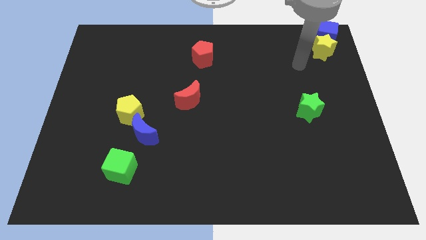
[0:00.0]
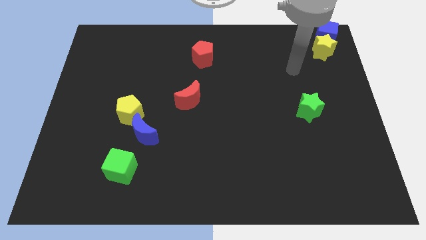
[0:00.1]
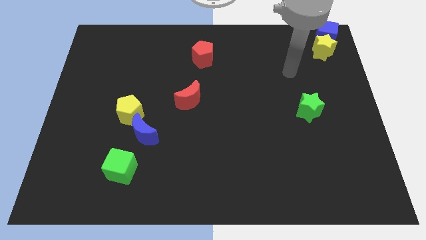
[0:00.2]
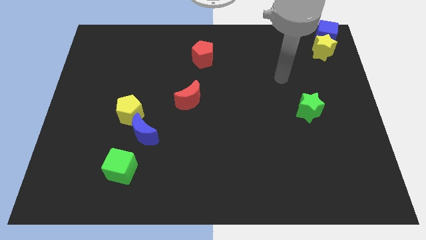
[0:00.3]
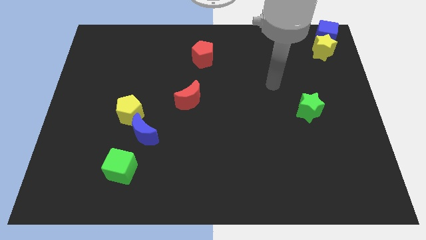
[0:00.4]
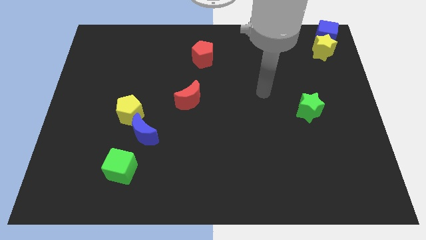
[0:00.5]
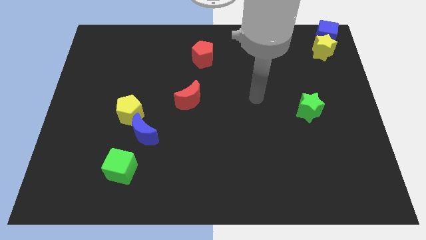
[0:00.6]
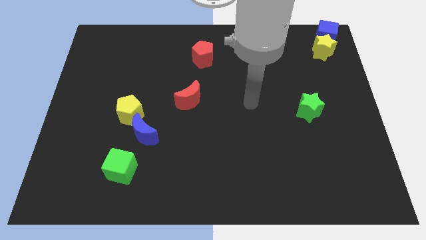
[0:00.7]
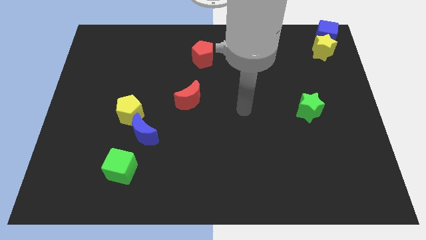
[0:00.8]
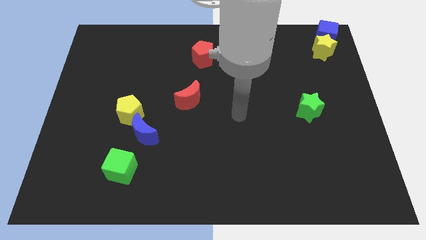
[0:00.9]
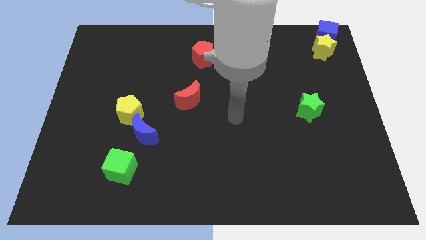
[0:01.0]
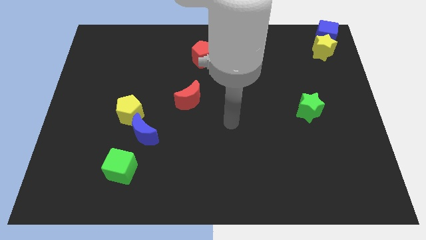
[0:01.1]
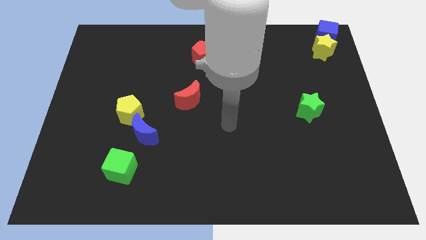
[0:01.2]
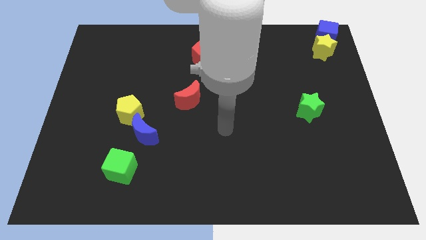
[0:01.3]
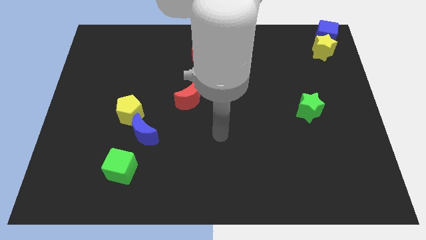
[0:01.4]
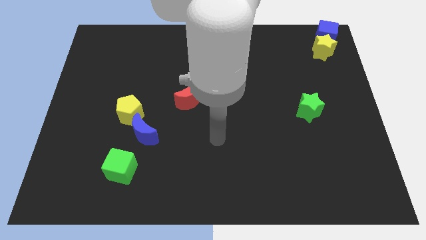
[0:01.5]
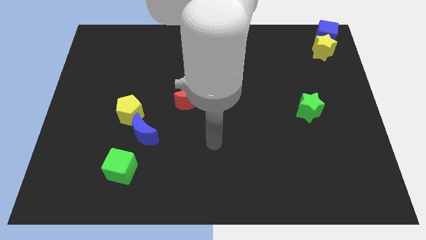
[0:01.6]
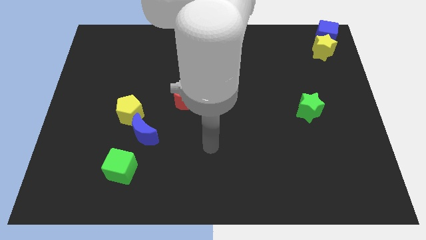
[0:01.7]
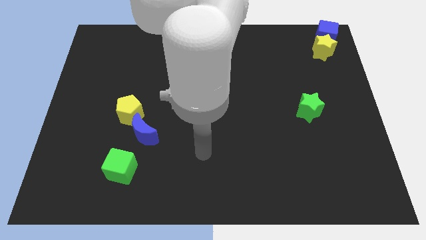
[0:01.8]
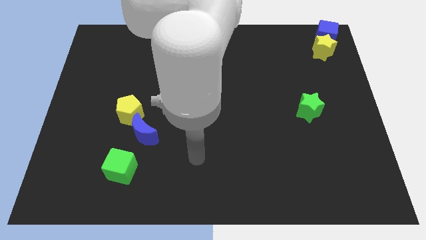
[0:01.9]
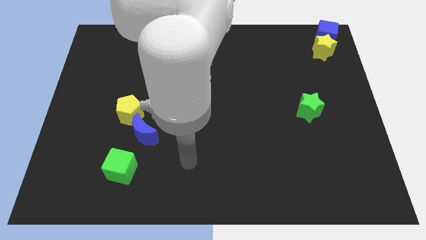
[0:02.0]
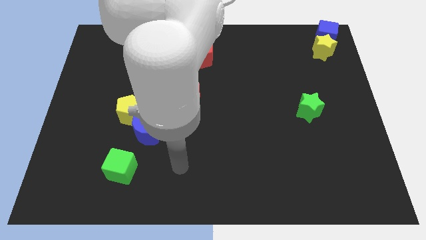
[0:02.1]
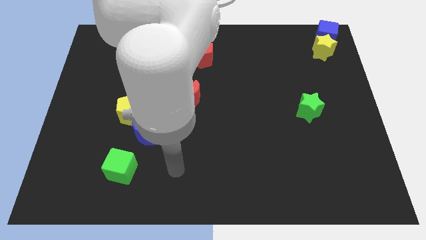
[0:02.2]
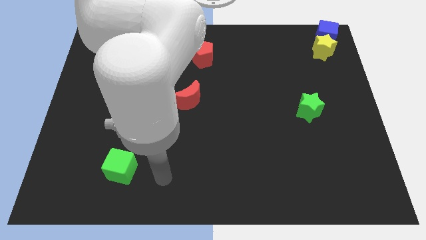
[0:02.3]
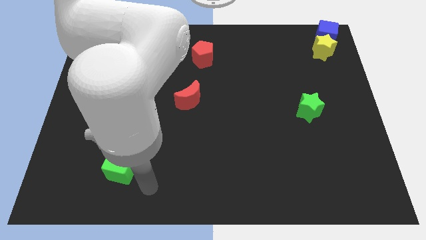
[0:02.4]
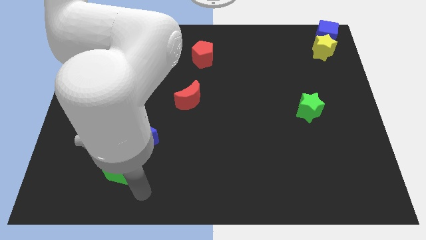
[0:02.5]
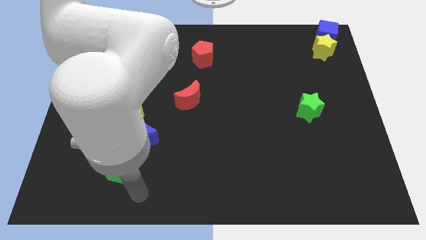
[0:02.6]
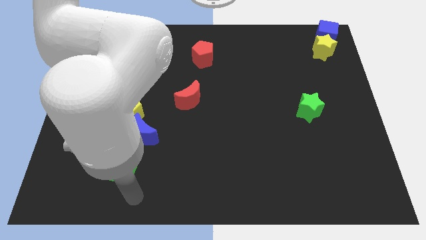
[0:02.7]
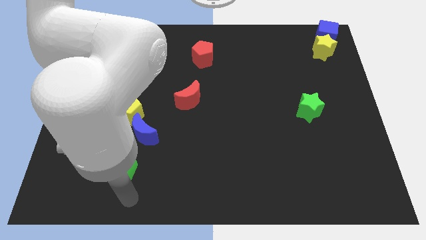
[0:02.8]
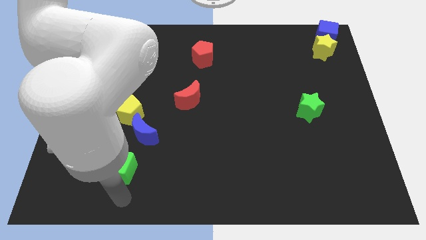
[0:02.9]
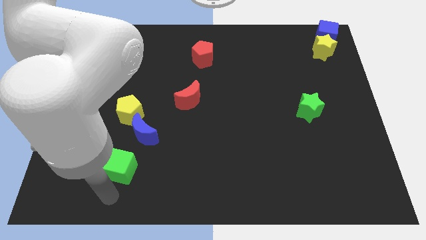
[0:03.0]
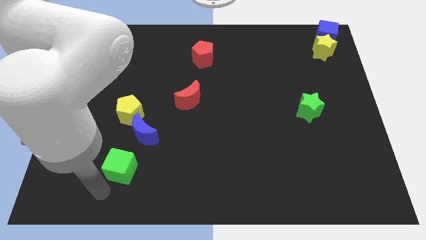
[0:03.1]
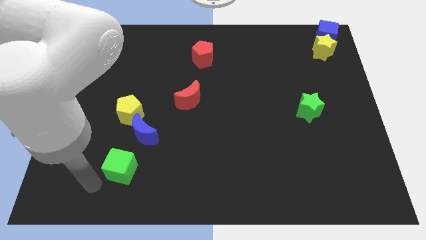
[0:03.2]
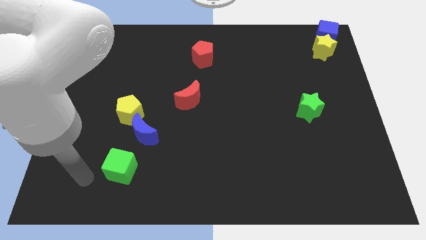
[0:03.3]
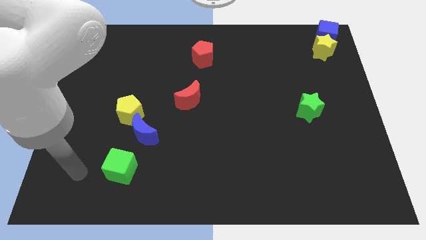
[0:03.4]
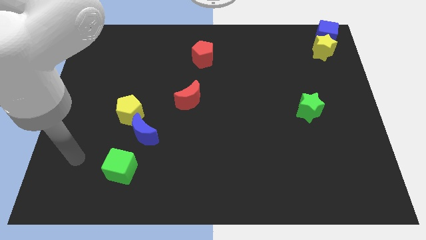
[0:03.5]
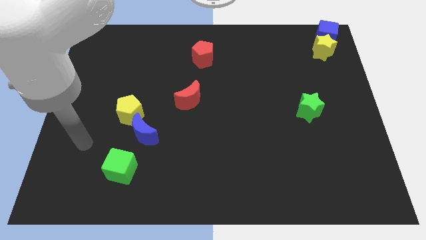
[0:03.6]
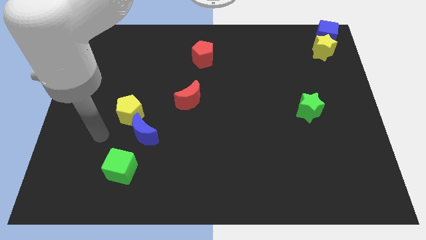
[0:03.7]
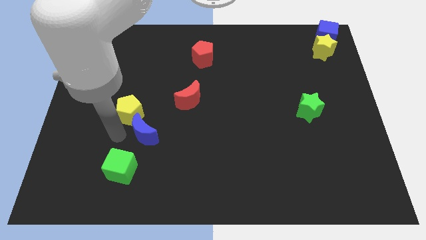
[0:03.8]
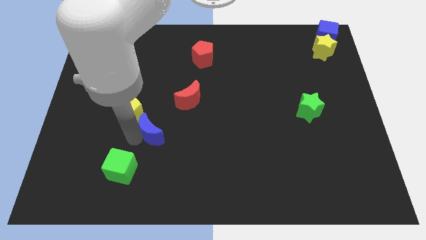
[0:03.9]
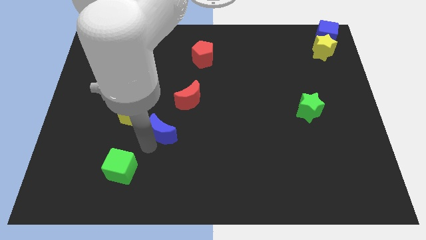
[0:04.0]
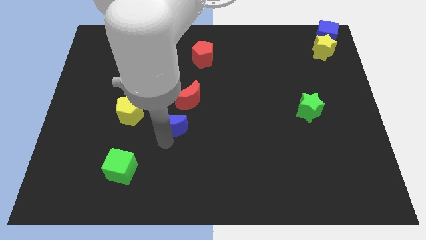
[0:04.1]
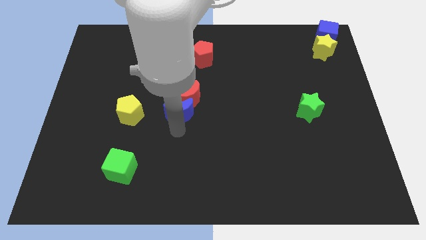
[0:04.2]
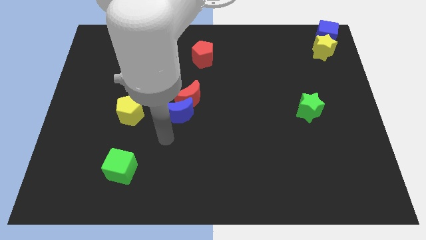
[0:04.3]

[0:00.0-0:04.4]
move the blue crescent to the bottom of the red crescent

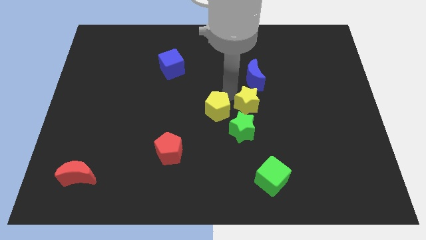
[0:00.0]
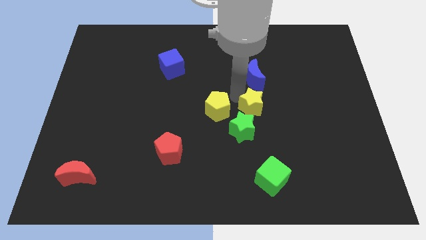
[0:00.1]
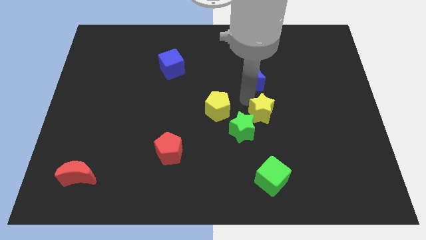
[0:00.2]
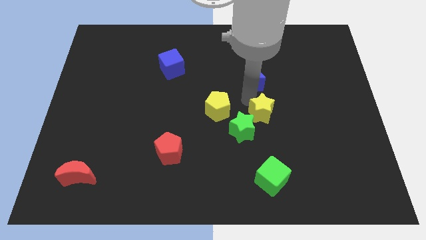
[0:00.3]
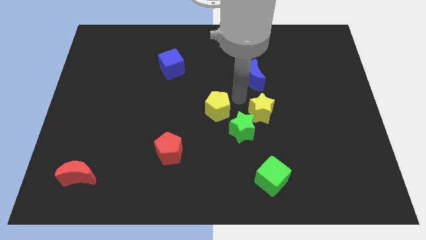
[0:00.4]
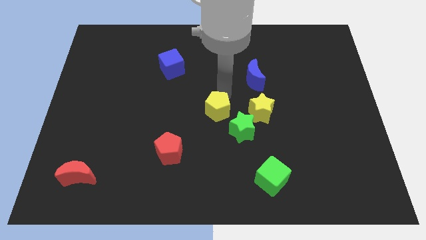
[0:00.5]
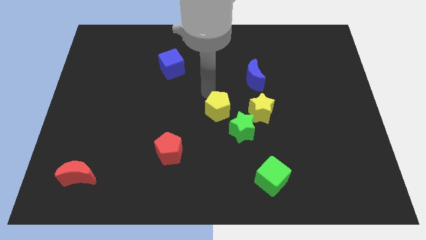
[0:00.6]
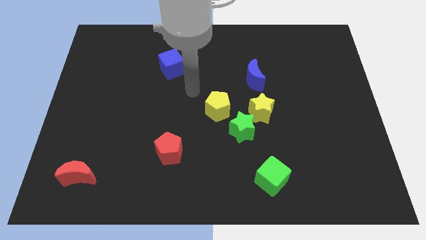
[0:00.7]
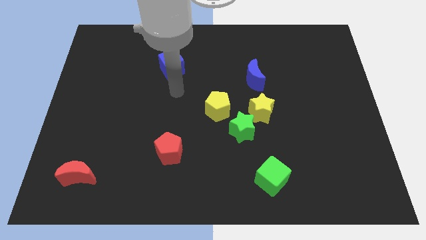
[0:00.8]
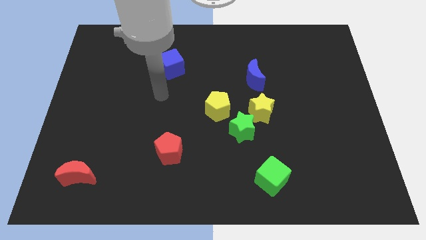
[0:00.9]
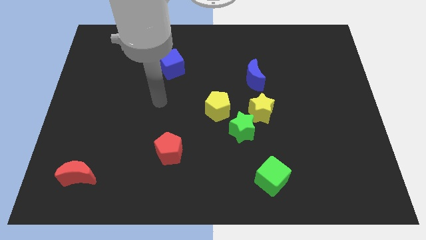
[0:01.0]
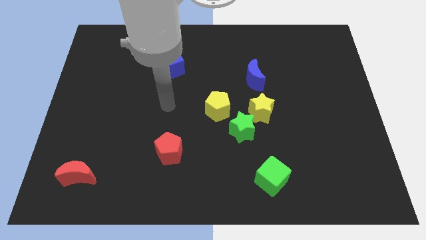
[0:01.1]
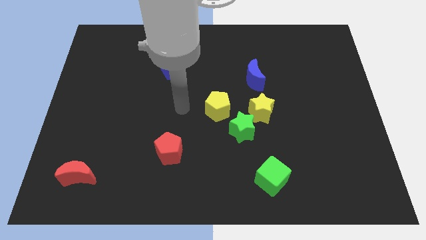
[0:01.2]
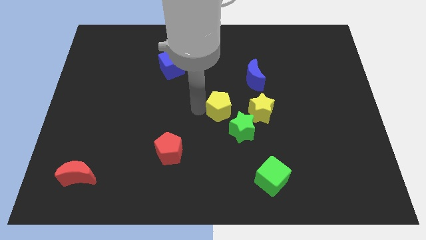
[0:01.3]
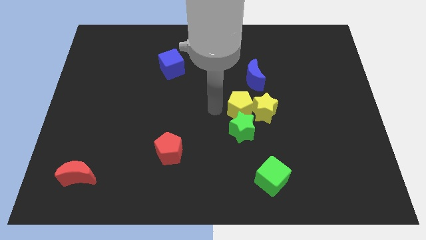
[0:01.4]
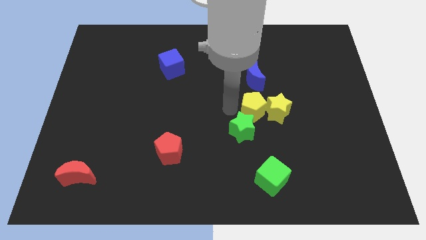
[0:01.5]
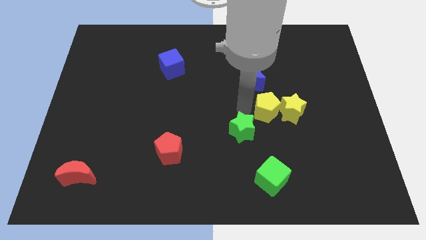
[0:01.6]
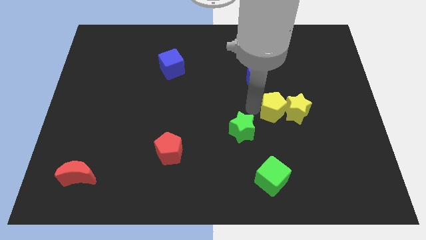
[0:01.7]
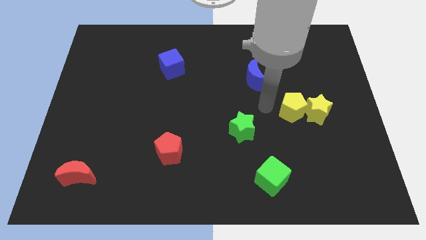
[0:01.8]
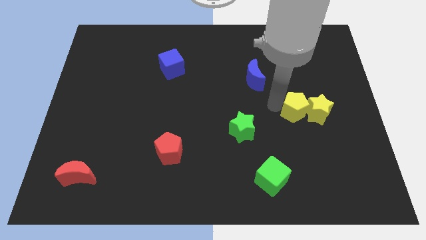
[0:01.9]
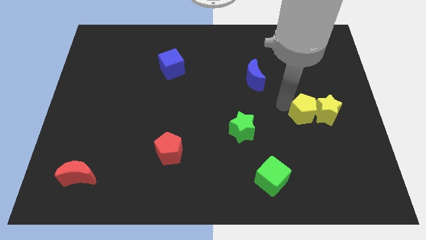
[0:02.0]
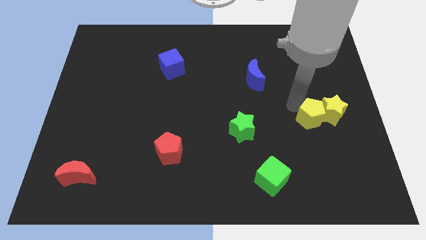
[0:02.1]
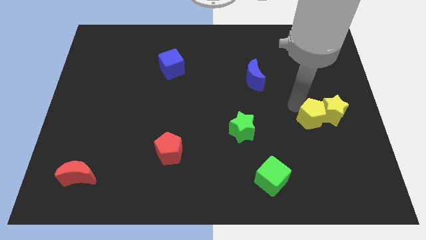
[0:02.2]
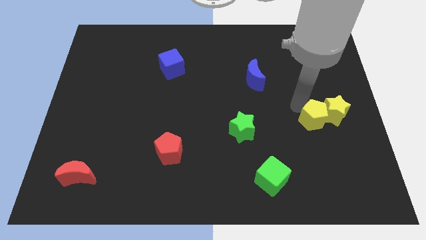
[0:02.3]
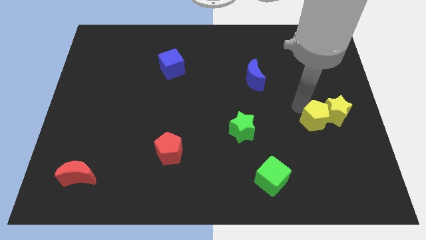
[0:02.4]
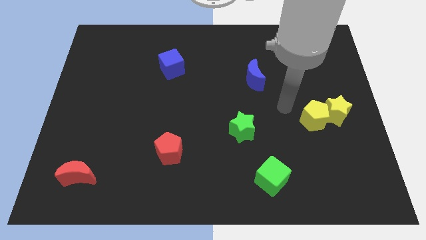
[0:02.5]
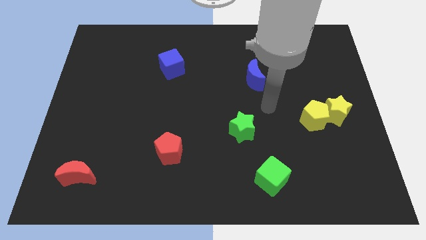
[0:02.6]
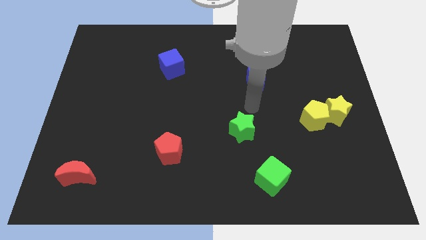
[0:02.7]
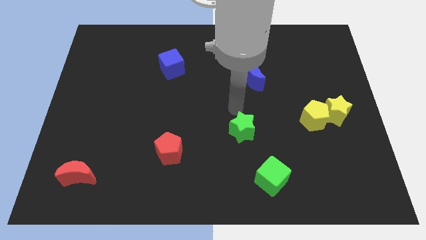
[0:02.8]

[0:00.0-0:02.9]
move yellow blocks to the right center of the board

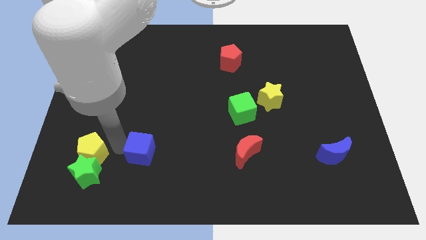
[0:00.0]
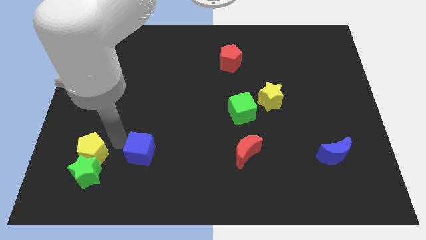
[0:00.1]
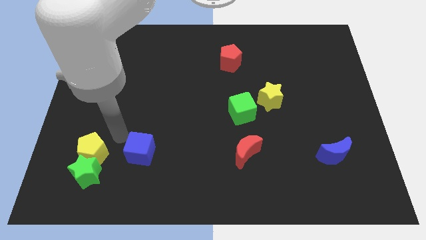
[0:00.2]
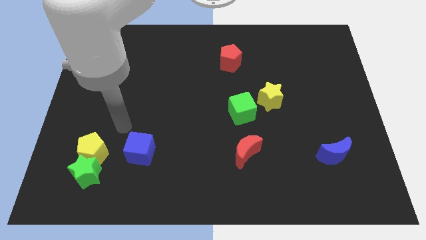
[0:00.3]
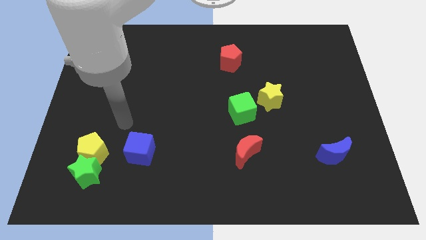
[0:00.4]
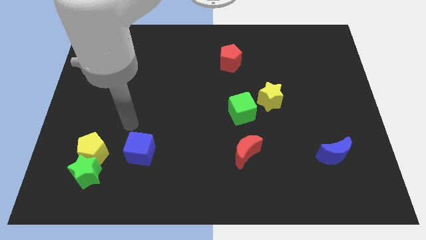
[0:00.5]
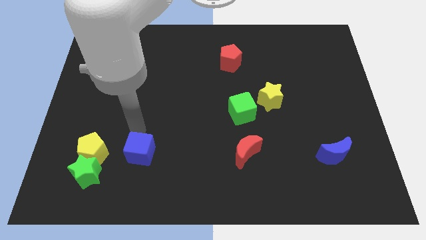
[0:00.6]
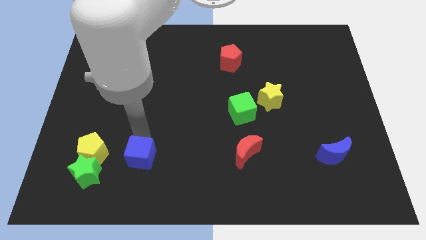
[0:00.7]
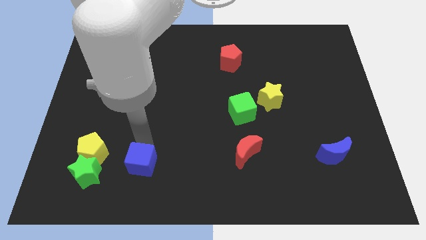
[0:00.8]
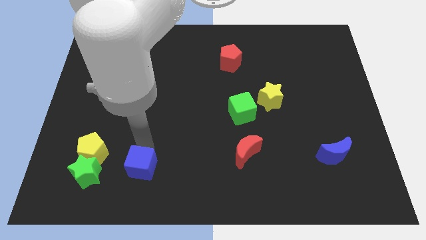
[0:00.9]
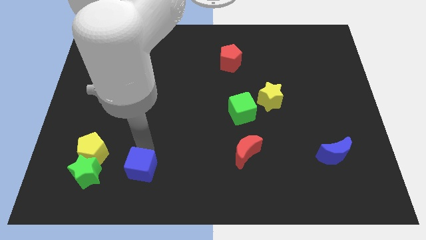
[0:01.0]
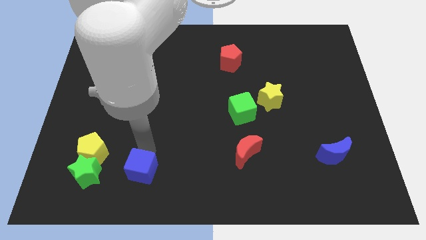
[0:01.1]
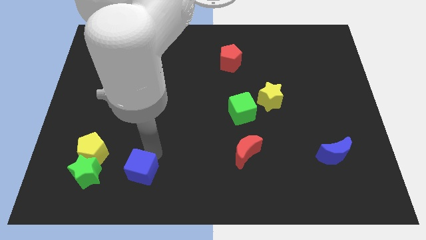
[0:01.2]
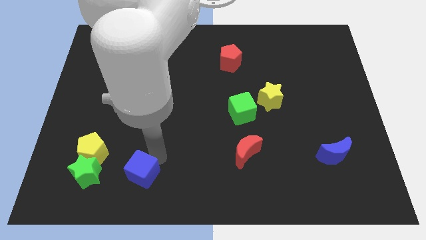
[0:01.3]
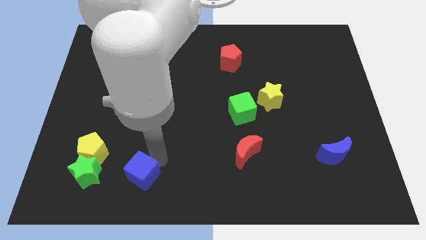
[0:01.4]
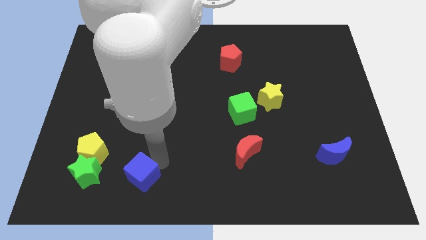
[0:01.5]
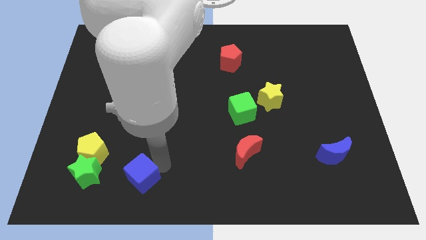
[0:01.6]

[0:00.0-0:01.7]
move the blue cube to the right of the green star

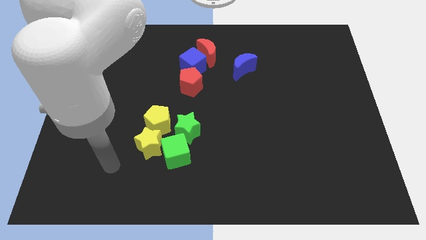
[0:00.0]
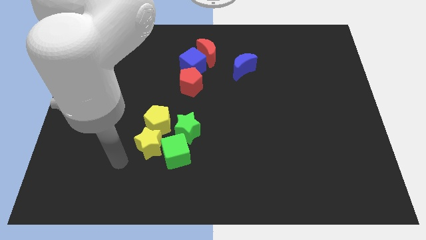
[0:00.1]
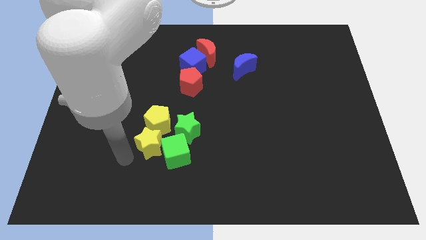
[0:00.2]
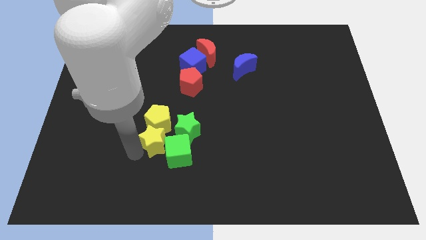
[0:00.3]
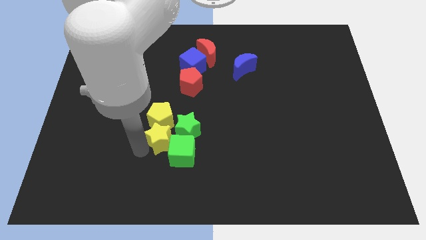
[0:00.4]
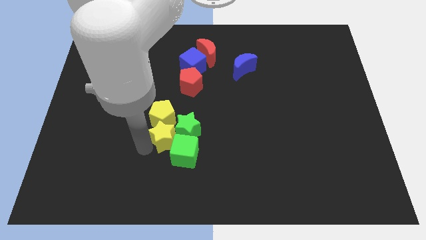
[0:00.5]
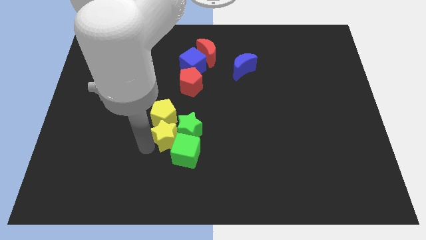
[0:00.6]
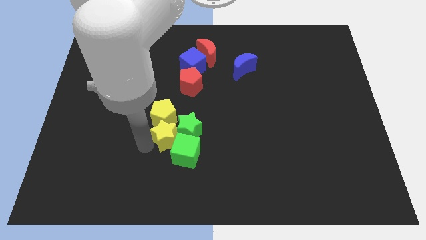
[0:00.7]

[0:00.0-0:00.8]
slightly move the group of yellow blocks into the group of green blocks
